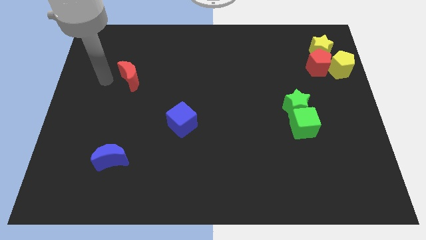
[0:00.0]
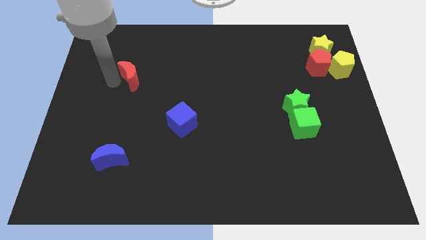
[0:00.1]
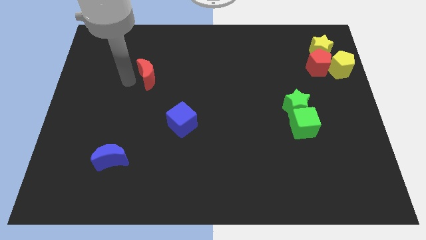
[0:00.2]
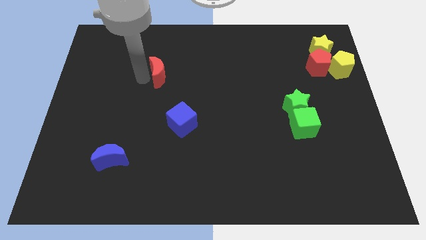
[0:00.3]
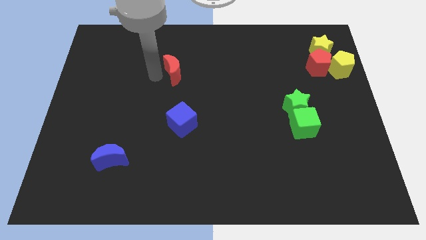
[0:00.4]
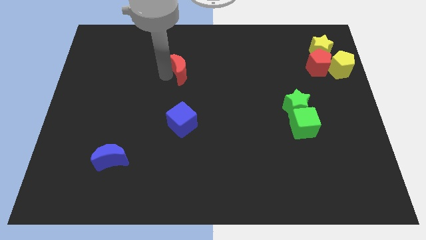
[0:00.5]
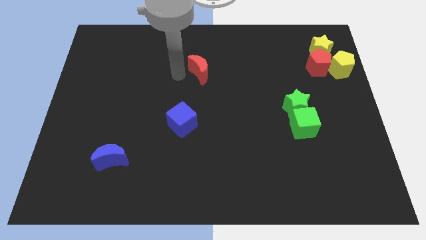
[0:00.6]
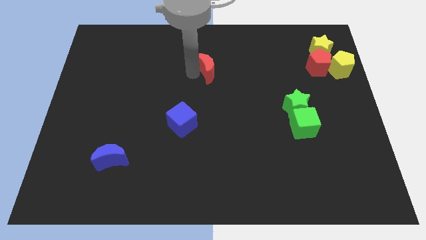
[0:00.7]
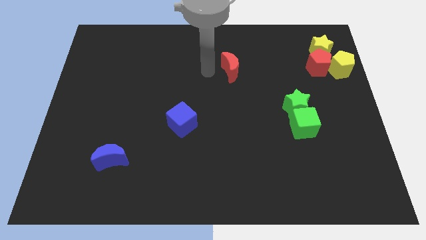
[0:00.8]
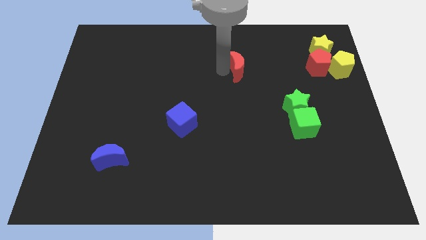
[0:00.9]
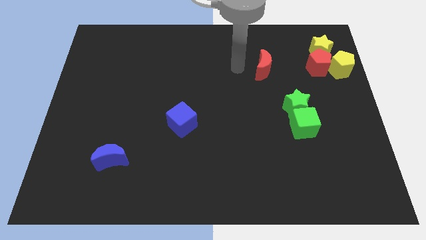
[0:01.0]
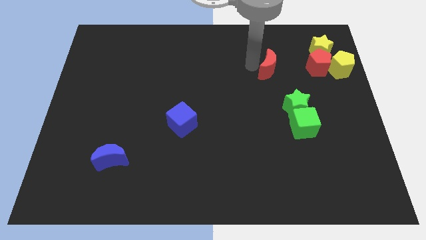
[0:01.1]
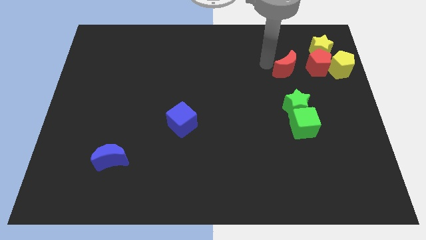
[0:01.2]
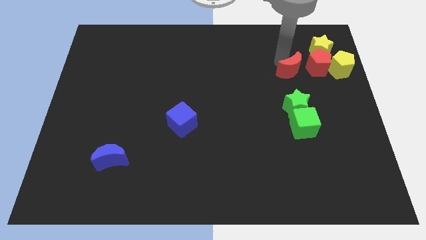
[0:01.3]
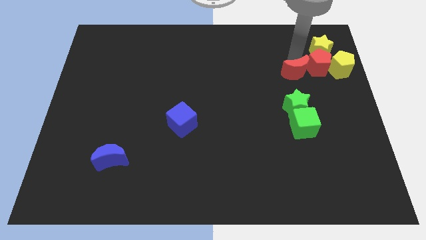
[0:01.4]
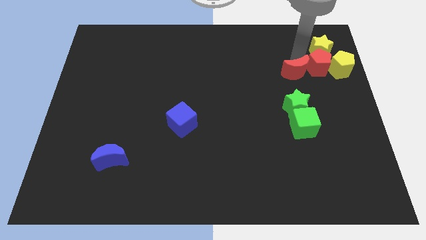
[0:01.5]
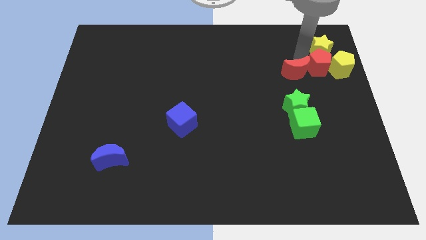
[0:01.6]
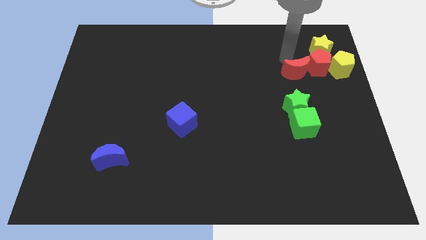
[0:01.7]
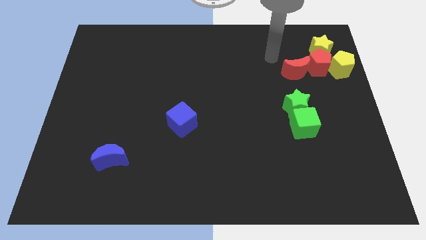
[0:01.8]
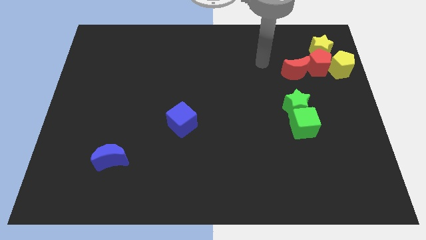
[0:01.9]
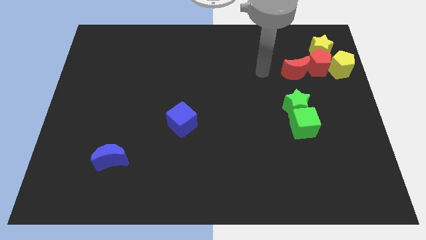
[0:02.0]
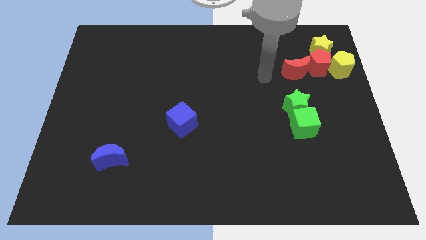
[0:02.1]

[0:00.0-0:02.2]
place the red crescent to the left side of red pentagon

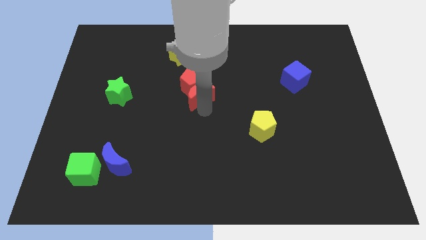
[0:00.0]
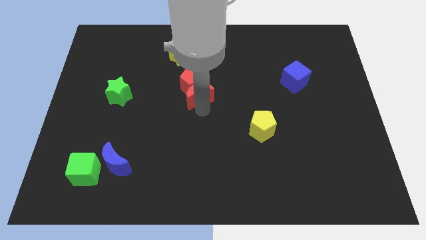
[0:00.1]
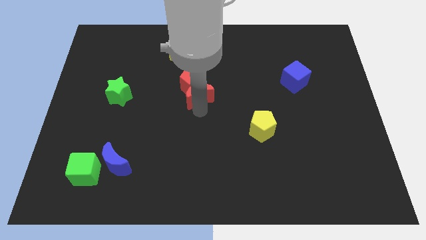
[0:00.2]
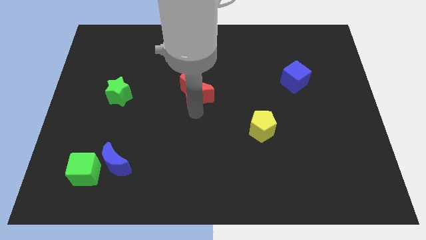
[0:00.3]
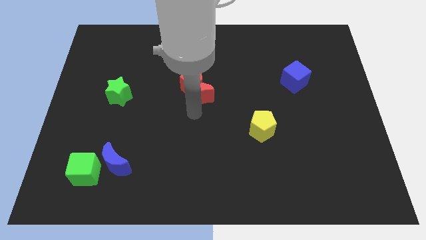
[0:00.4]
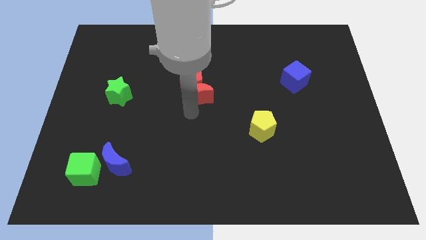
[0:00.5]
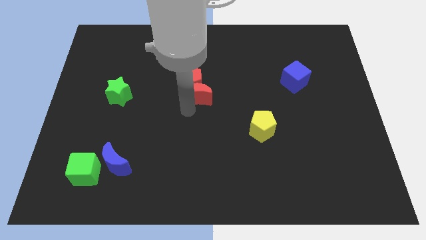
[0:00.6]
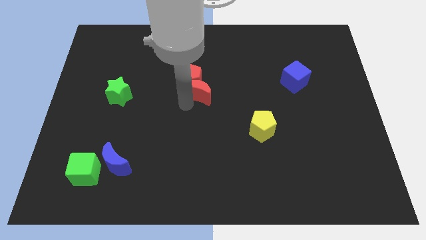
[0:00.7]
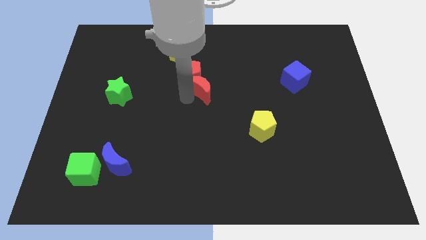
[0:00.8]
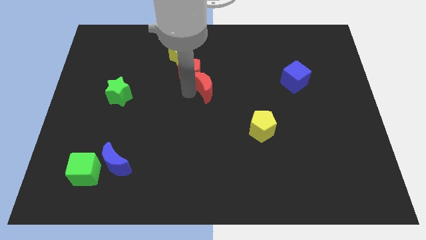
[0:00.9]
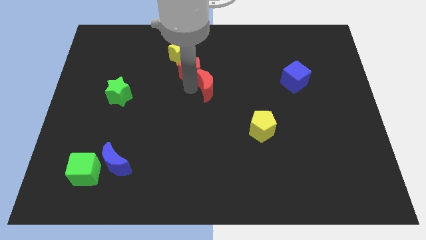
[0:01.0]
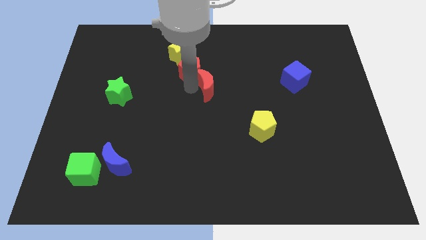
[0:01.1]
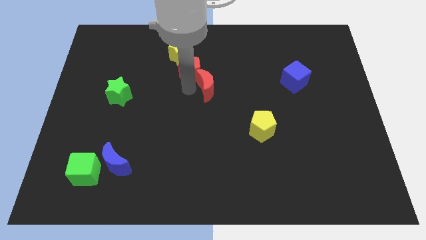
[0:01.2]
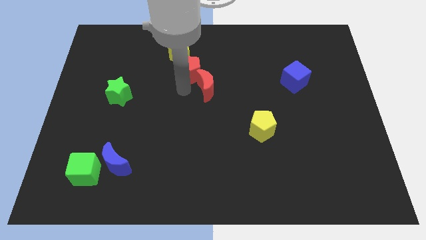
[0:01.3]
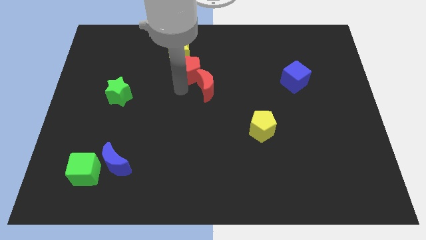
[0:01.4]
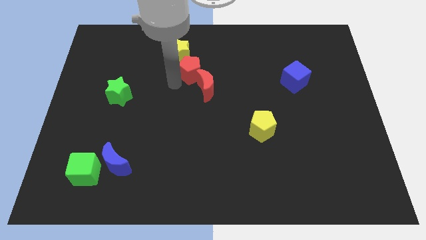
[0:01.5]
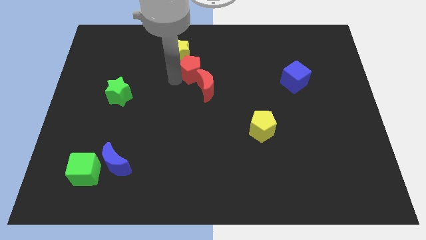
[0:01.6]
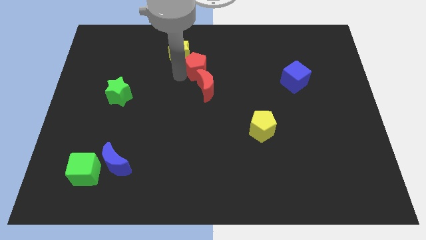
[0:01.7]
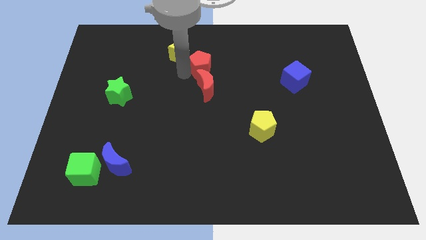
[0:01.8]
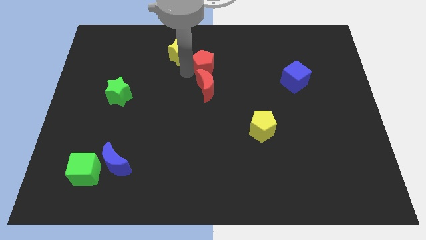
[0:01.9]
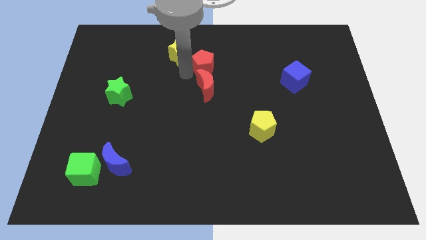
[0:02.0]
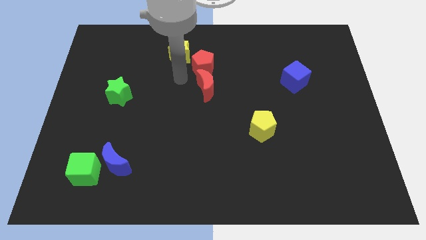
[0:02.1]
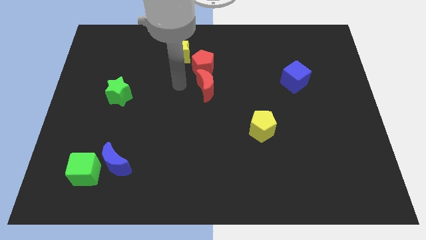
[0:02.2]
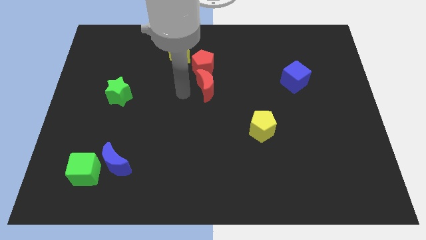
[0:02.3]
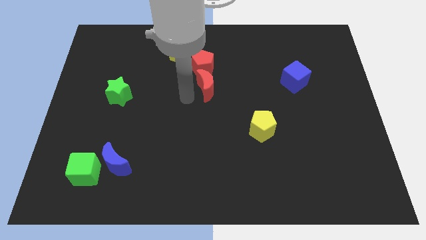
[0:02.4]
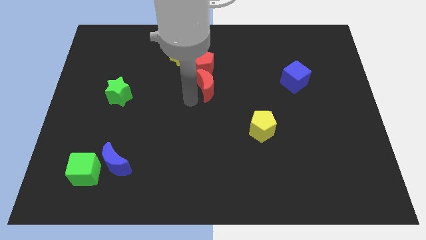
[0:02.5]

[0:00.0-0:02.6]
separate red moon and red pentagon

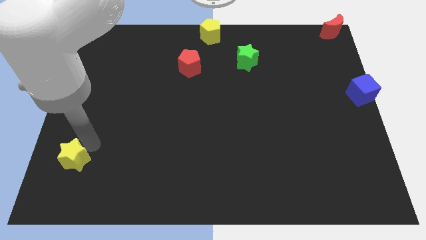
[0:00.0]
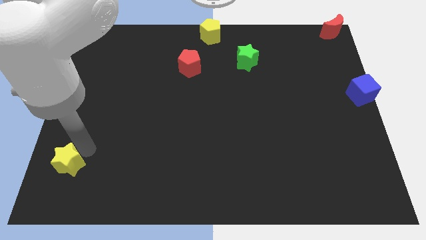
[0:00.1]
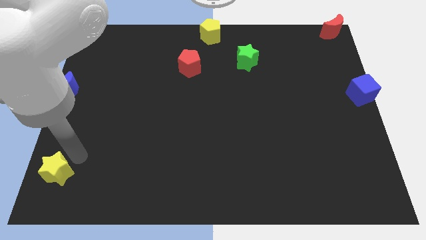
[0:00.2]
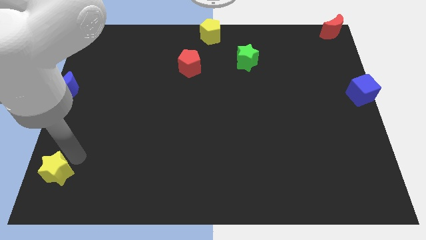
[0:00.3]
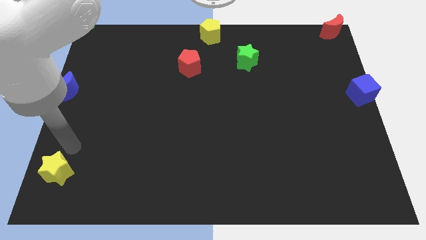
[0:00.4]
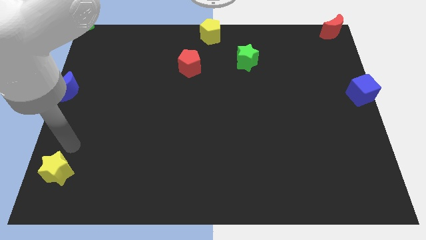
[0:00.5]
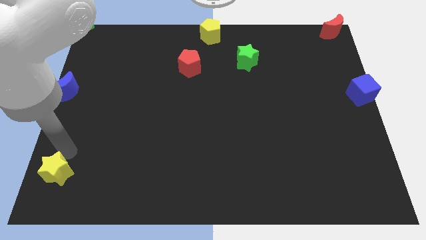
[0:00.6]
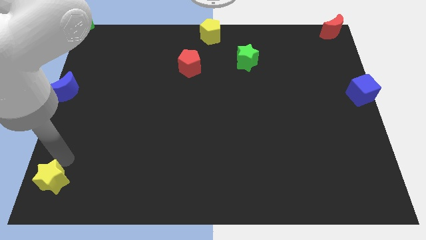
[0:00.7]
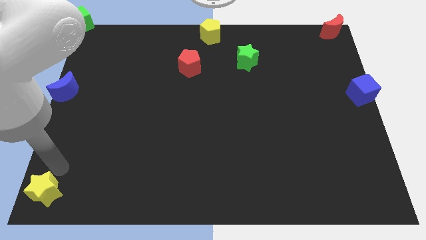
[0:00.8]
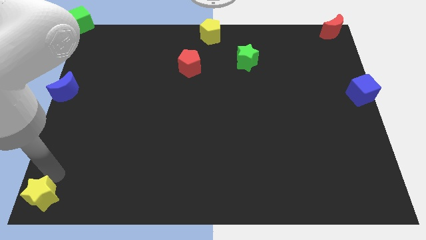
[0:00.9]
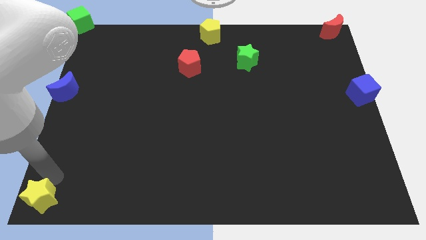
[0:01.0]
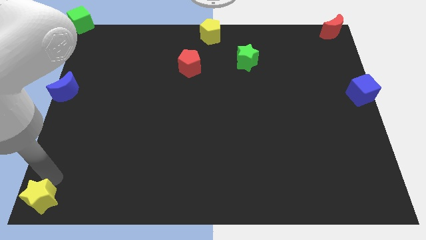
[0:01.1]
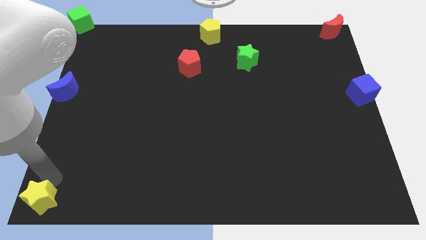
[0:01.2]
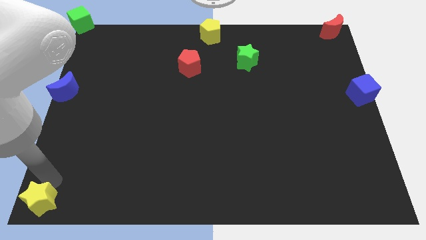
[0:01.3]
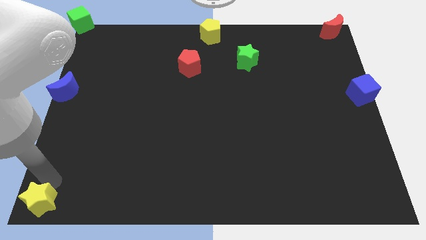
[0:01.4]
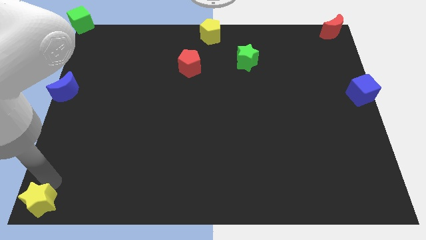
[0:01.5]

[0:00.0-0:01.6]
push the yellow star towards the bottom left of the board

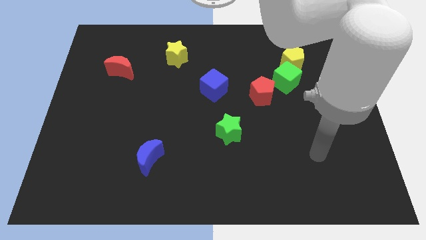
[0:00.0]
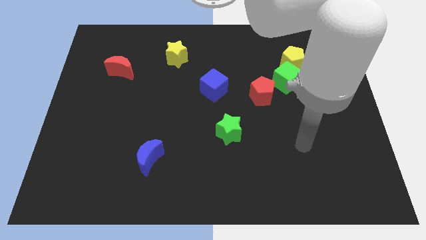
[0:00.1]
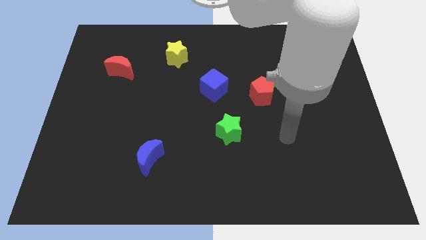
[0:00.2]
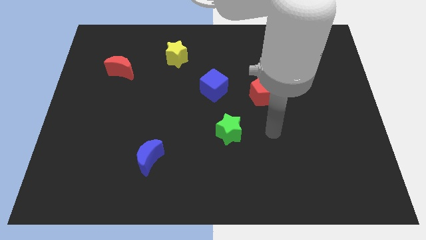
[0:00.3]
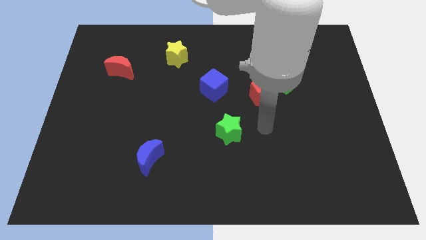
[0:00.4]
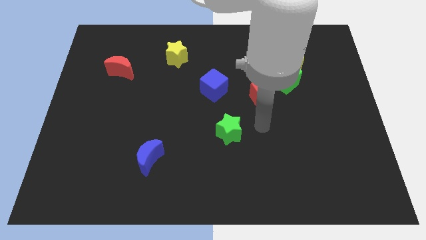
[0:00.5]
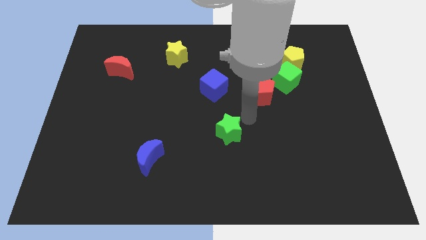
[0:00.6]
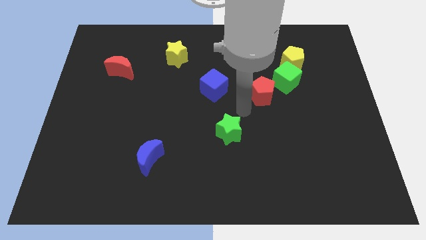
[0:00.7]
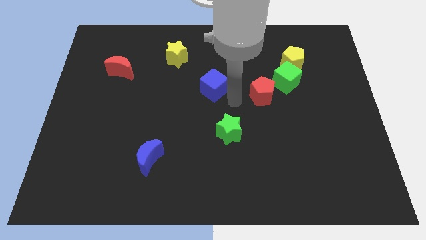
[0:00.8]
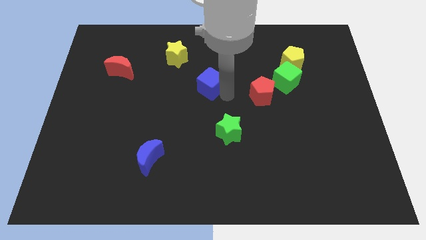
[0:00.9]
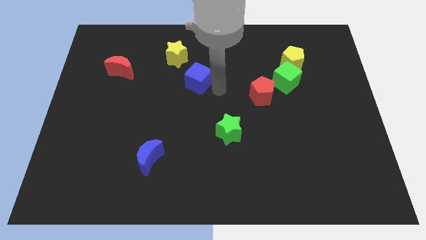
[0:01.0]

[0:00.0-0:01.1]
slide blue cube towards yellow star

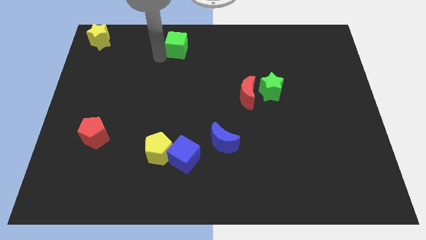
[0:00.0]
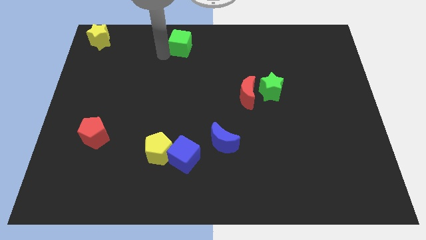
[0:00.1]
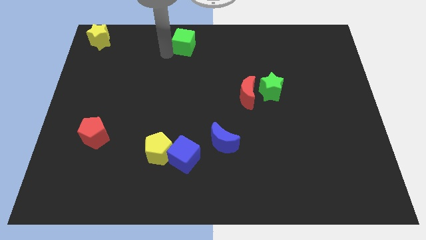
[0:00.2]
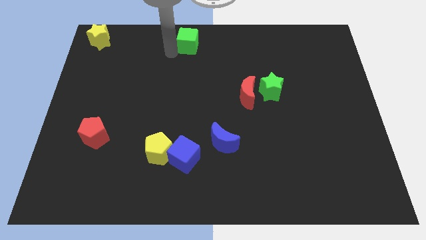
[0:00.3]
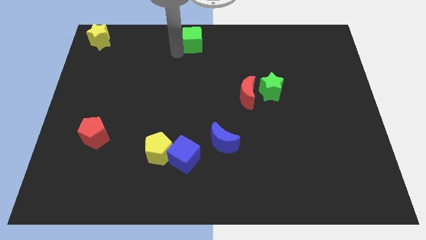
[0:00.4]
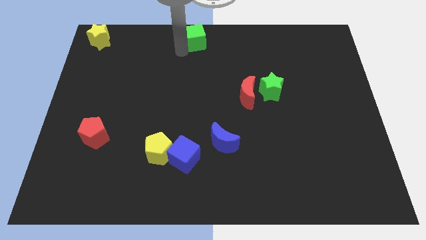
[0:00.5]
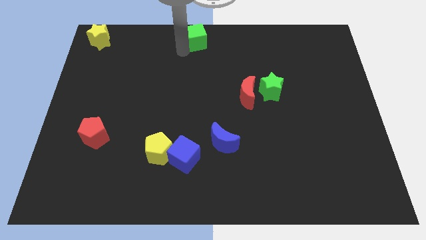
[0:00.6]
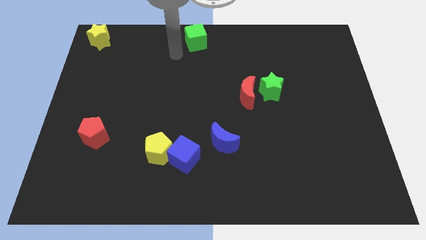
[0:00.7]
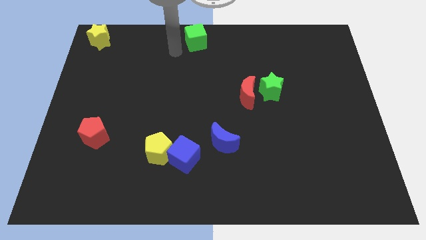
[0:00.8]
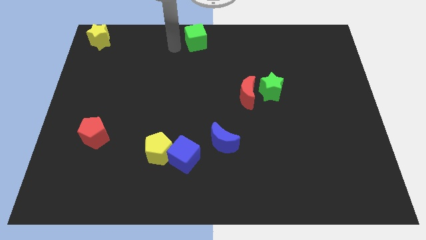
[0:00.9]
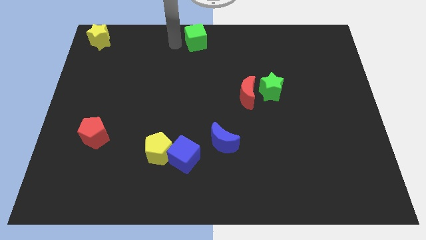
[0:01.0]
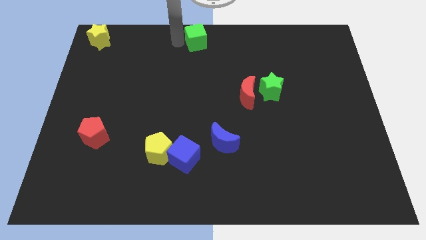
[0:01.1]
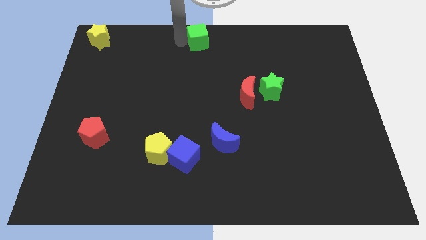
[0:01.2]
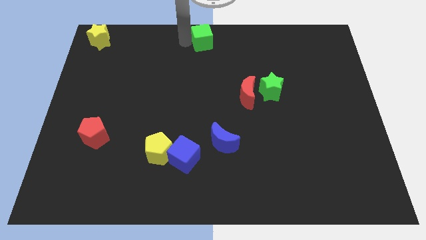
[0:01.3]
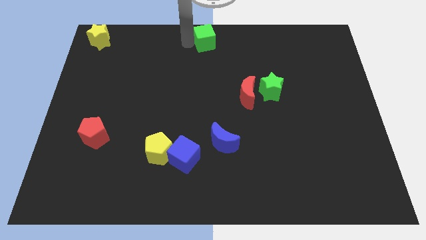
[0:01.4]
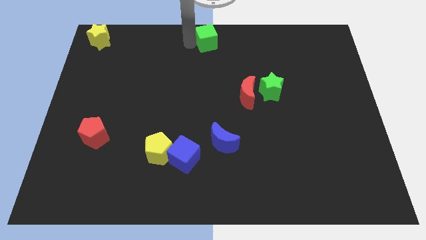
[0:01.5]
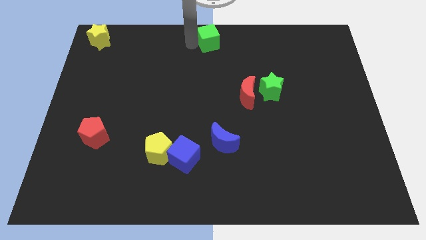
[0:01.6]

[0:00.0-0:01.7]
push the green cube to the top center of the board
